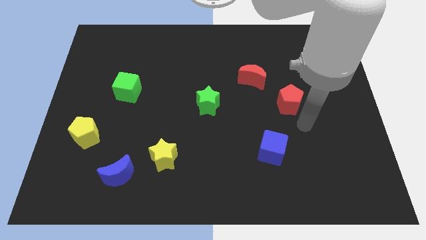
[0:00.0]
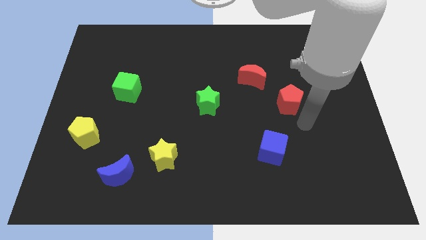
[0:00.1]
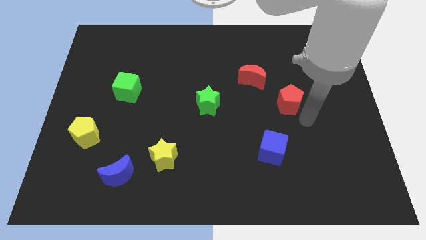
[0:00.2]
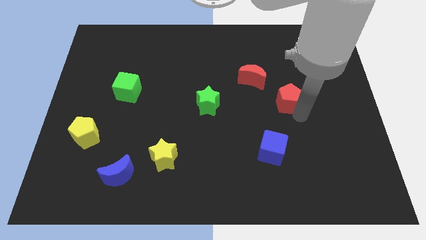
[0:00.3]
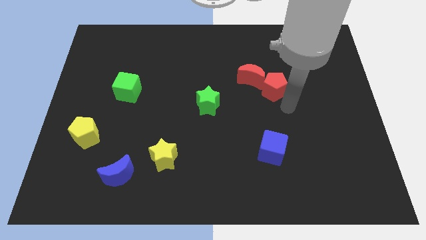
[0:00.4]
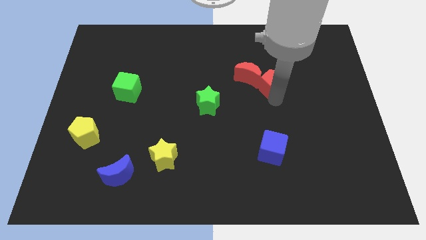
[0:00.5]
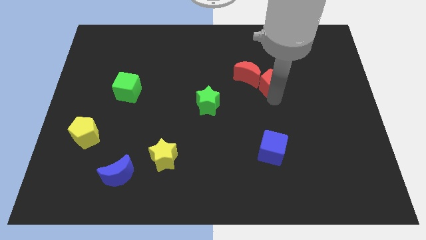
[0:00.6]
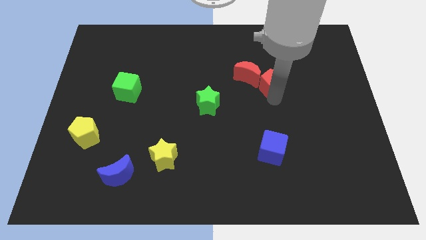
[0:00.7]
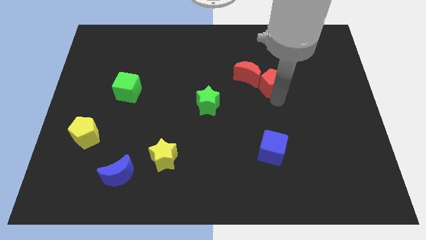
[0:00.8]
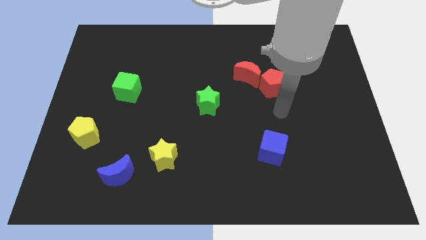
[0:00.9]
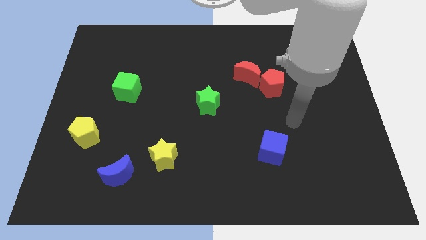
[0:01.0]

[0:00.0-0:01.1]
push the red pentagon close to the red crescent

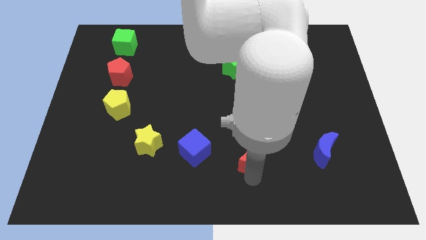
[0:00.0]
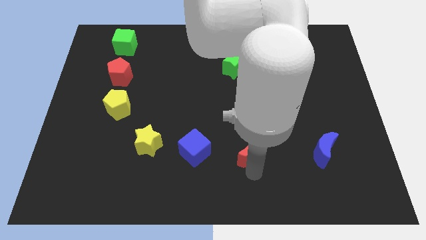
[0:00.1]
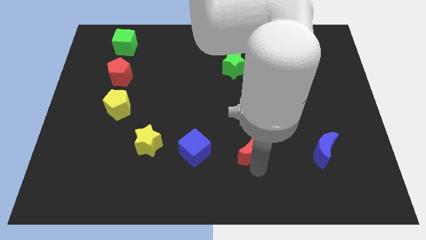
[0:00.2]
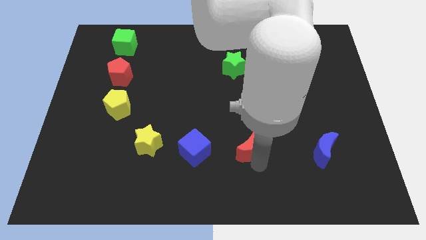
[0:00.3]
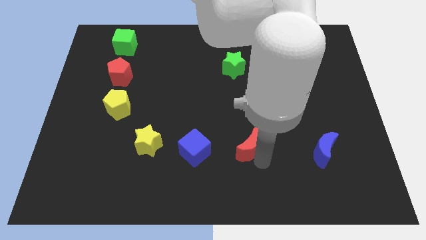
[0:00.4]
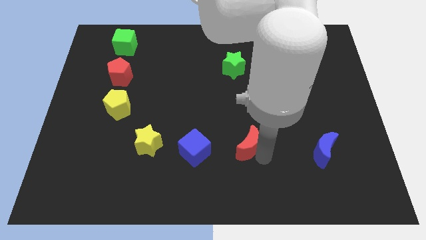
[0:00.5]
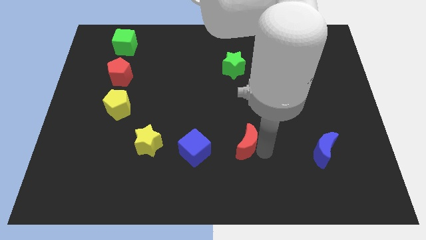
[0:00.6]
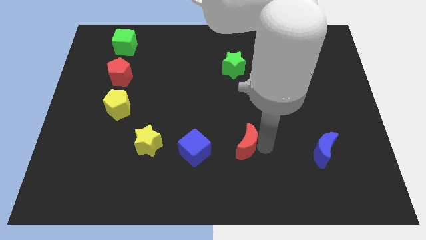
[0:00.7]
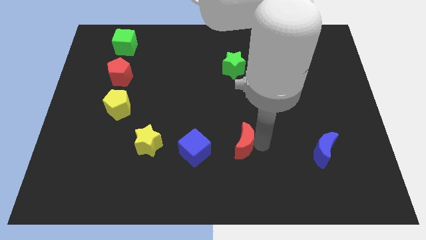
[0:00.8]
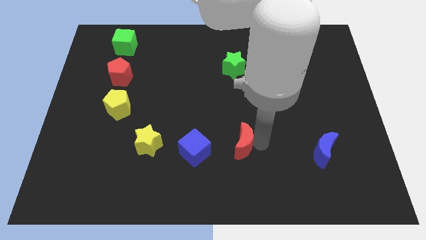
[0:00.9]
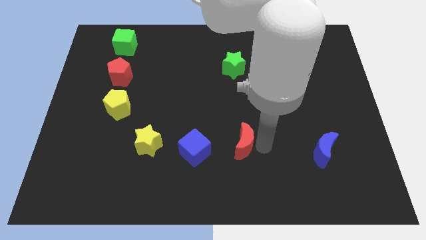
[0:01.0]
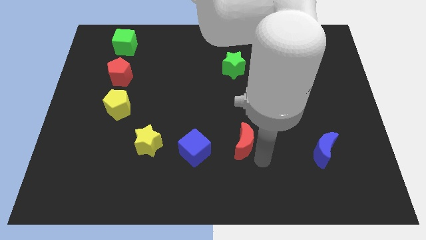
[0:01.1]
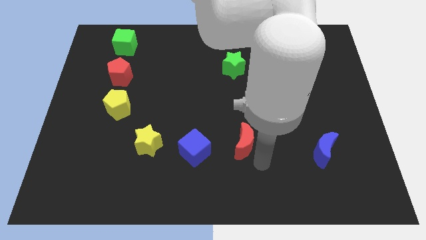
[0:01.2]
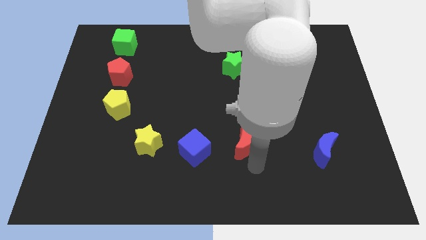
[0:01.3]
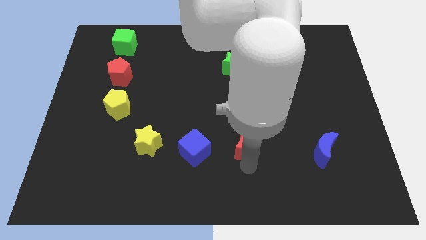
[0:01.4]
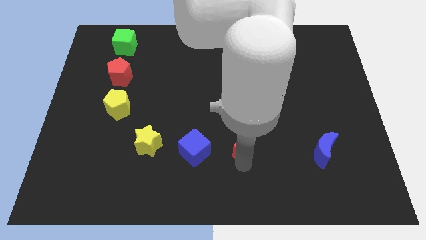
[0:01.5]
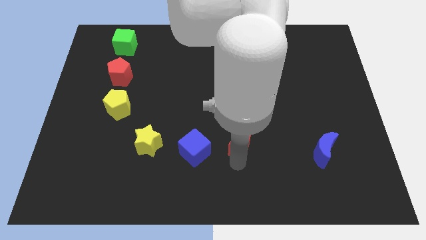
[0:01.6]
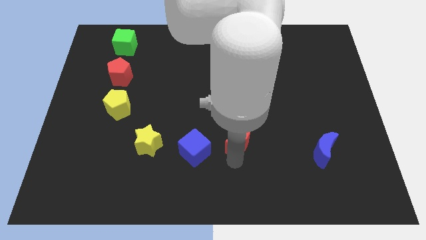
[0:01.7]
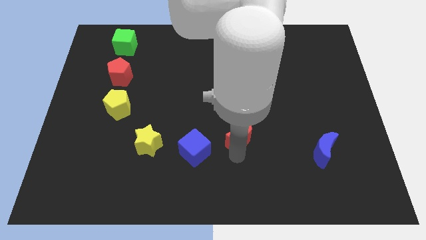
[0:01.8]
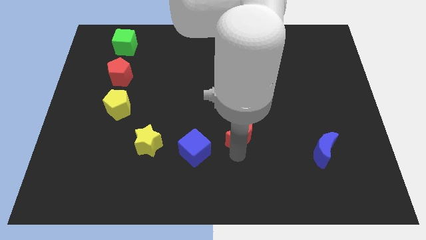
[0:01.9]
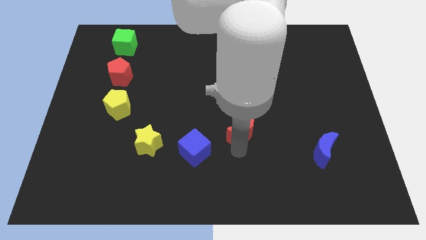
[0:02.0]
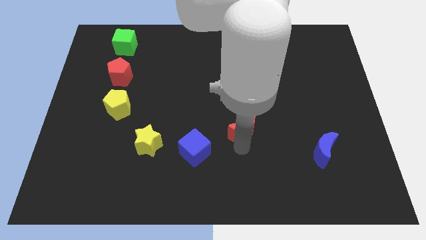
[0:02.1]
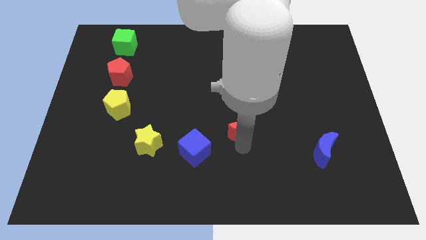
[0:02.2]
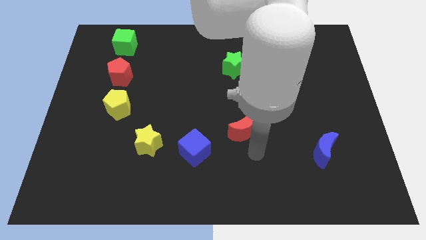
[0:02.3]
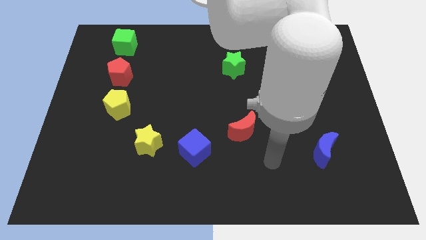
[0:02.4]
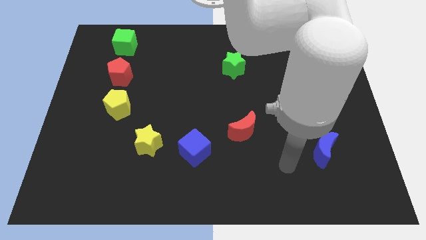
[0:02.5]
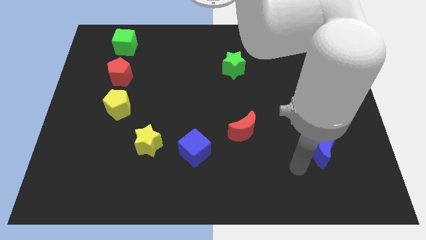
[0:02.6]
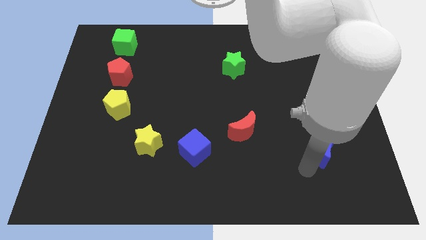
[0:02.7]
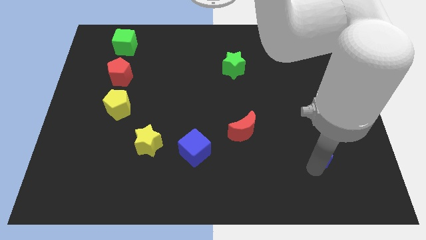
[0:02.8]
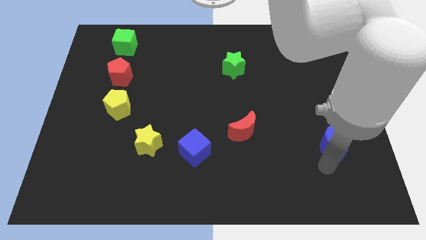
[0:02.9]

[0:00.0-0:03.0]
move red moon slightly up

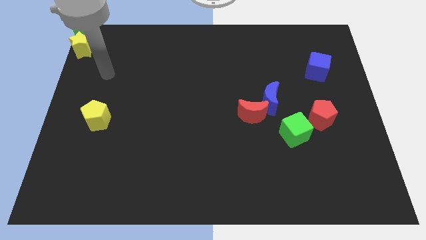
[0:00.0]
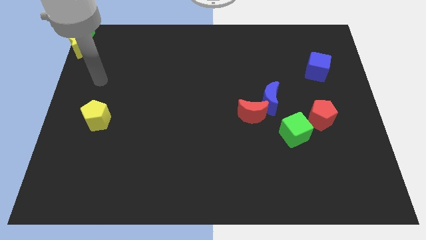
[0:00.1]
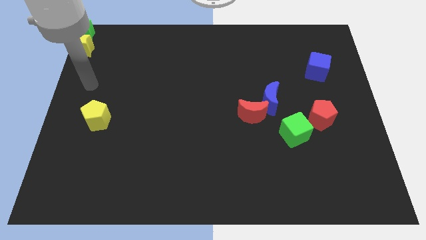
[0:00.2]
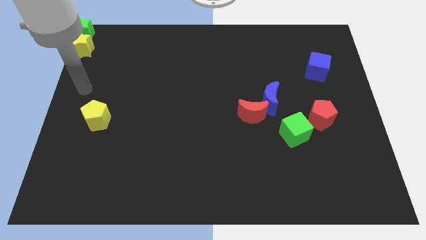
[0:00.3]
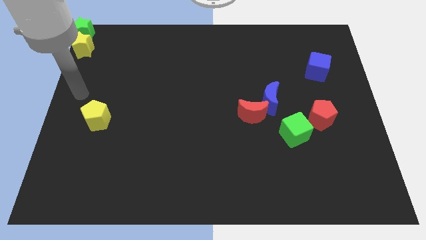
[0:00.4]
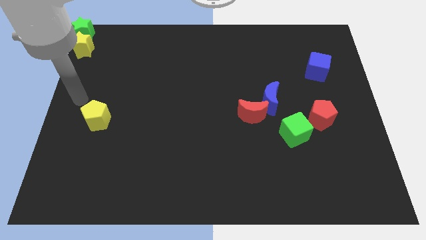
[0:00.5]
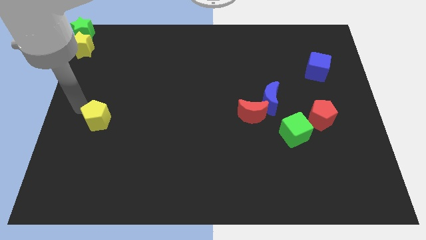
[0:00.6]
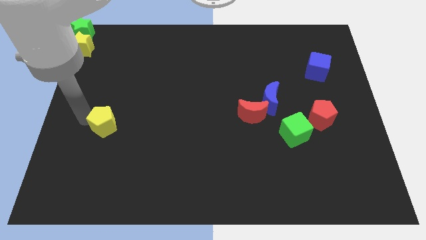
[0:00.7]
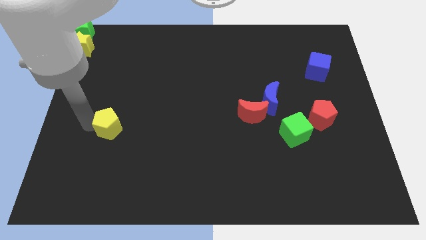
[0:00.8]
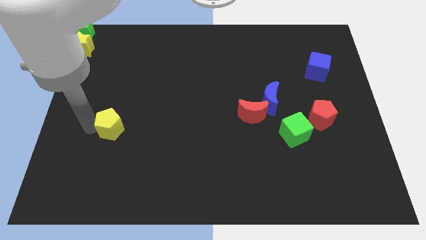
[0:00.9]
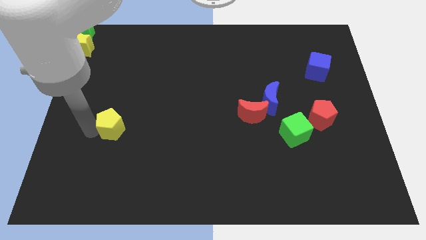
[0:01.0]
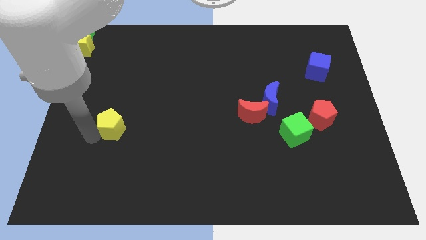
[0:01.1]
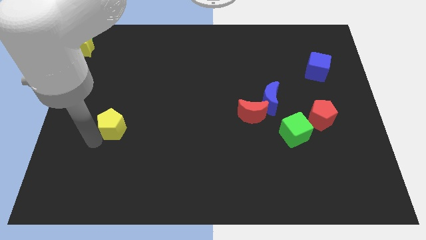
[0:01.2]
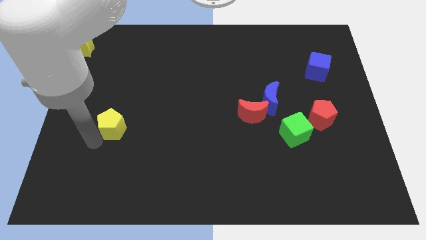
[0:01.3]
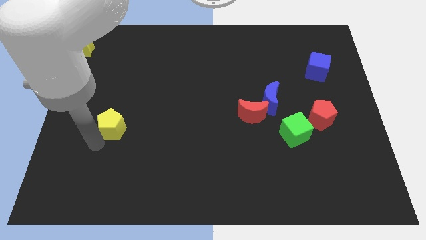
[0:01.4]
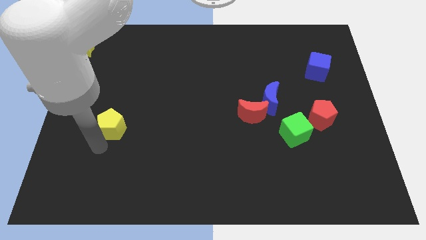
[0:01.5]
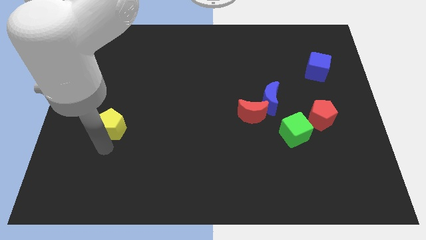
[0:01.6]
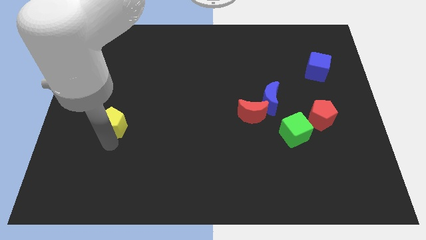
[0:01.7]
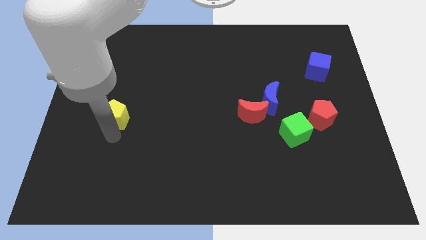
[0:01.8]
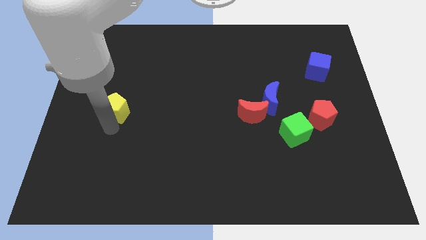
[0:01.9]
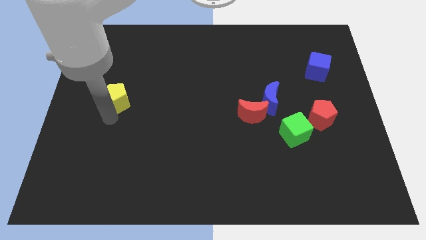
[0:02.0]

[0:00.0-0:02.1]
move yellow pentagon to the left of red moon

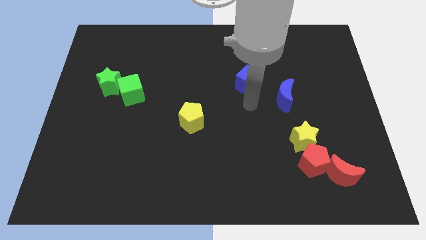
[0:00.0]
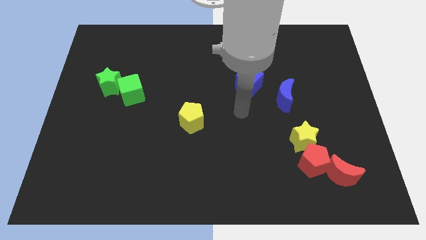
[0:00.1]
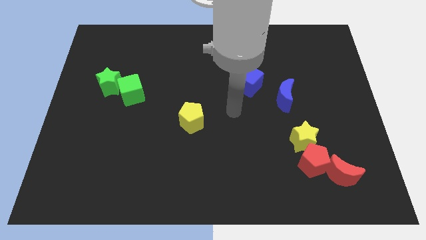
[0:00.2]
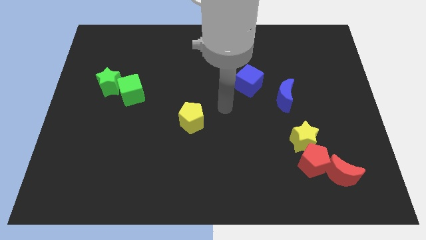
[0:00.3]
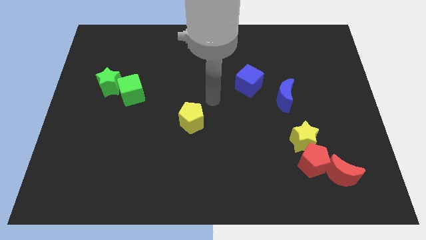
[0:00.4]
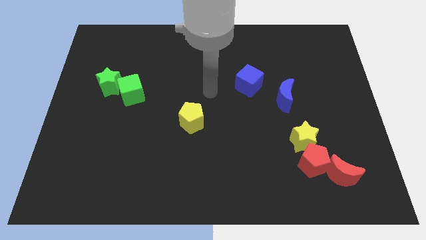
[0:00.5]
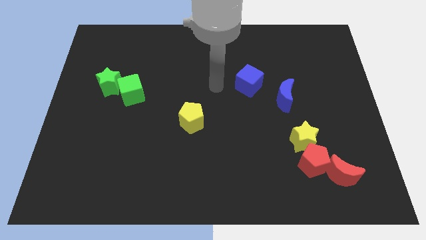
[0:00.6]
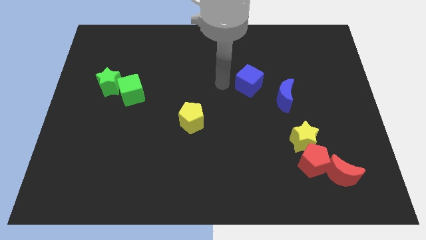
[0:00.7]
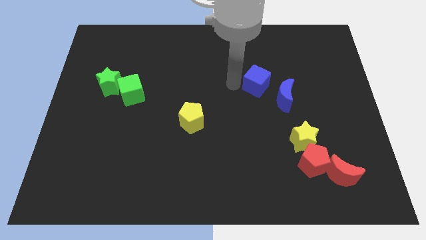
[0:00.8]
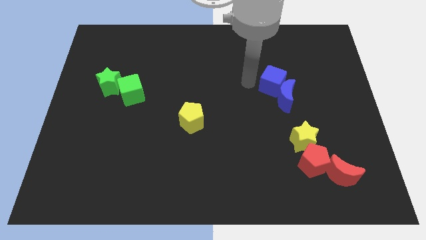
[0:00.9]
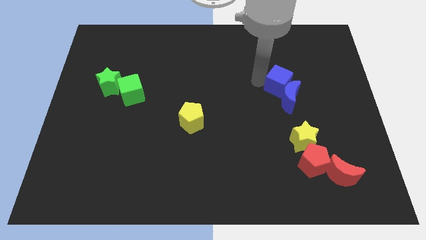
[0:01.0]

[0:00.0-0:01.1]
move the blue cube into the blue crescent

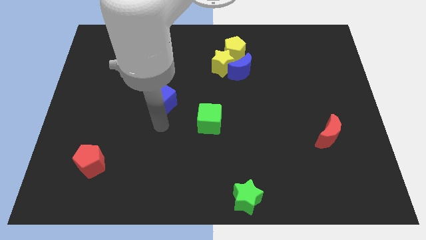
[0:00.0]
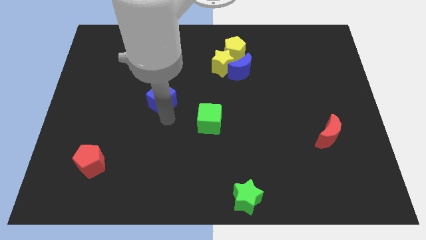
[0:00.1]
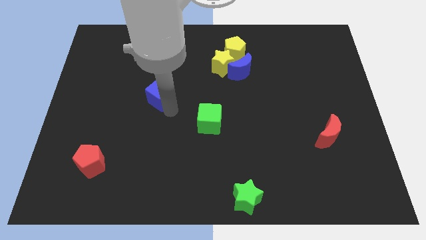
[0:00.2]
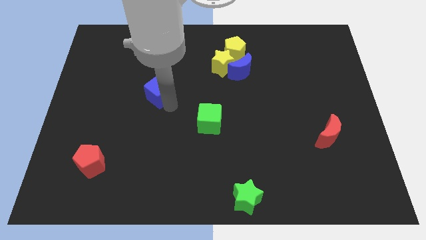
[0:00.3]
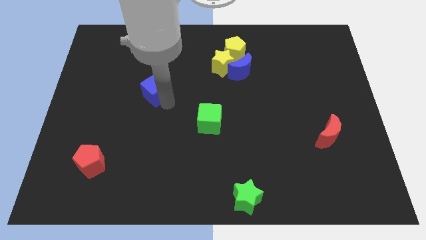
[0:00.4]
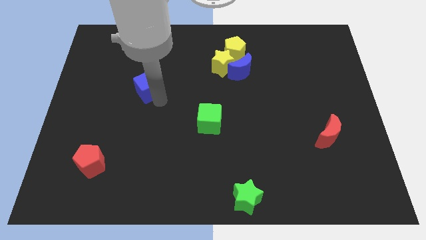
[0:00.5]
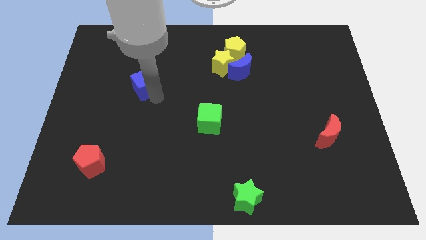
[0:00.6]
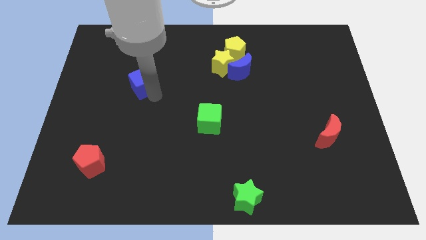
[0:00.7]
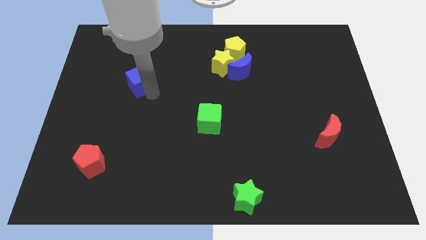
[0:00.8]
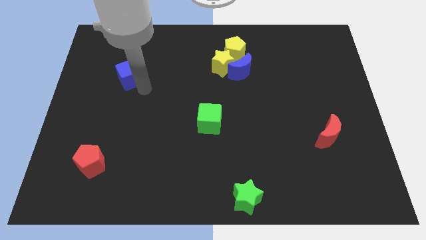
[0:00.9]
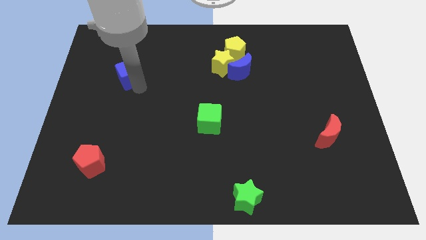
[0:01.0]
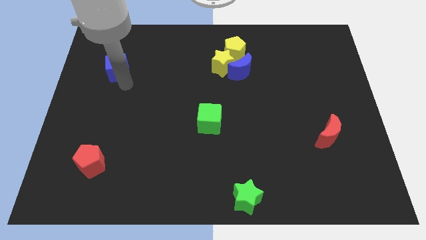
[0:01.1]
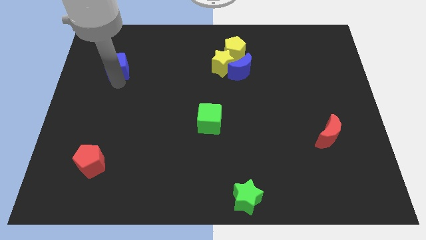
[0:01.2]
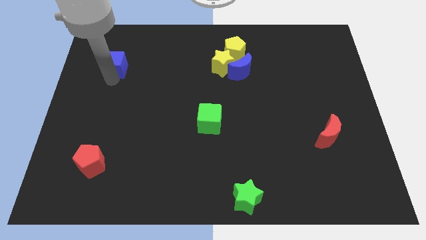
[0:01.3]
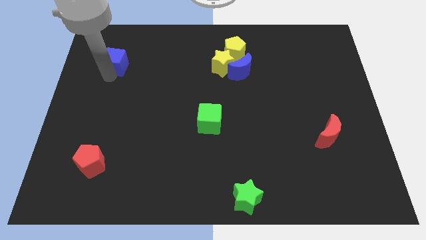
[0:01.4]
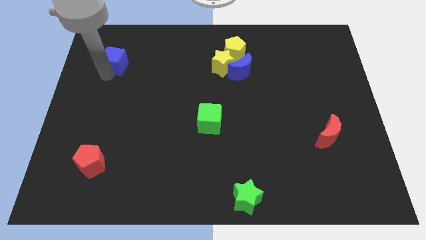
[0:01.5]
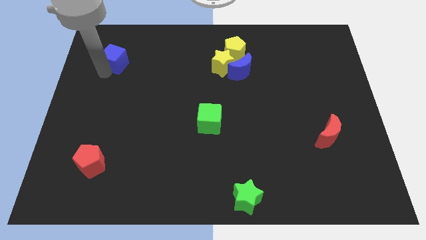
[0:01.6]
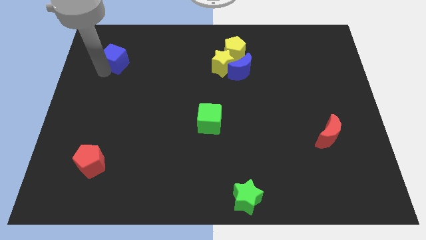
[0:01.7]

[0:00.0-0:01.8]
place the blue cube parallel to yellow star
